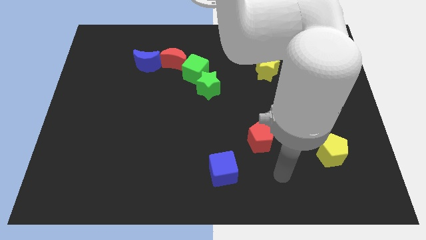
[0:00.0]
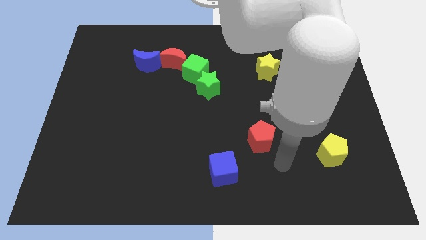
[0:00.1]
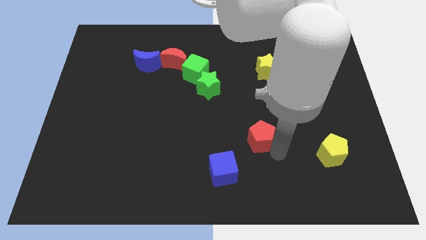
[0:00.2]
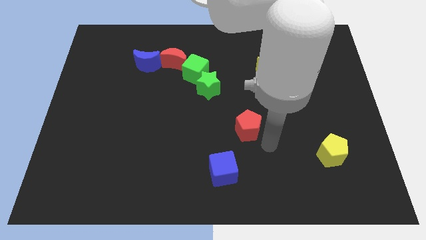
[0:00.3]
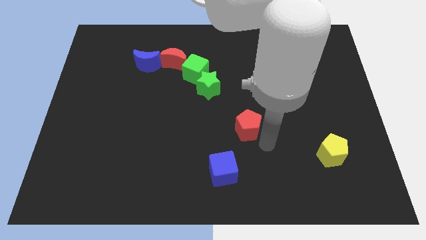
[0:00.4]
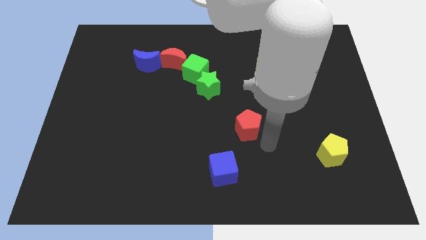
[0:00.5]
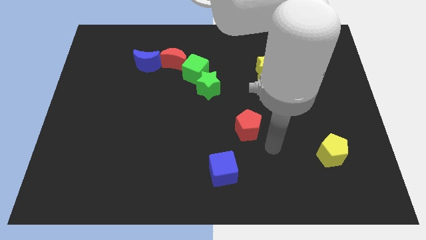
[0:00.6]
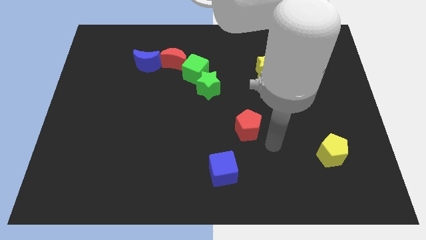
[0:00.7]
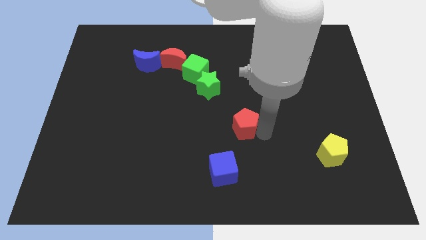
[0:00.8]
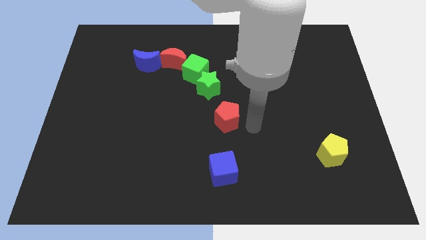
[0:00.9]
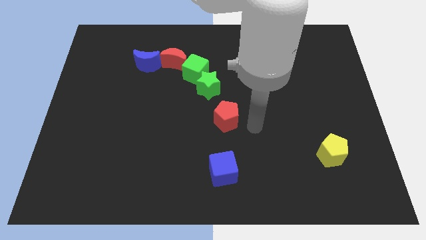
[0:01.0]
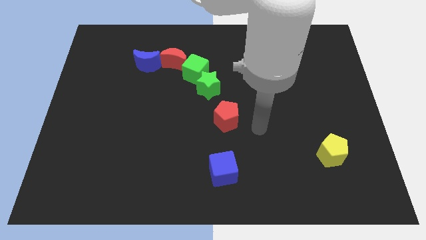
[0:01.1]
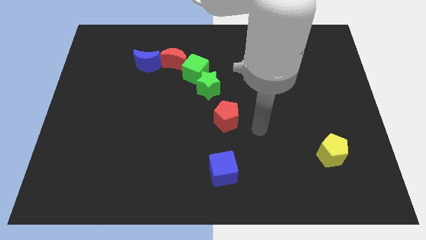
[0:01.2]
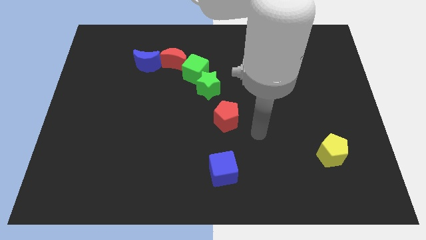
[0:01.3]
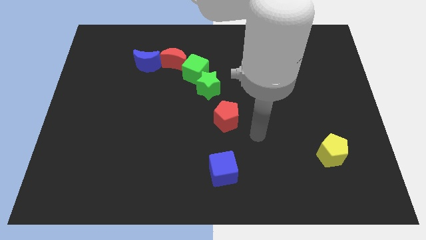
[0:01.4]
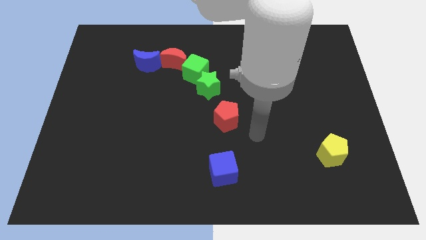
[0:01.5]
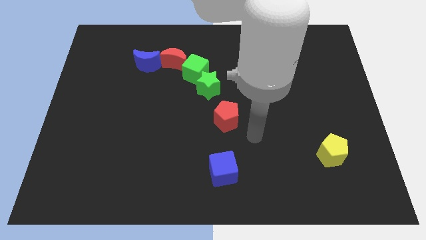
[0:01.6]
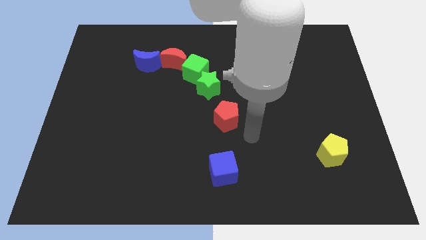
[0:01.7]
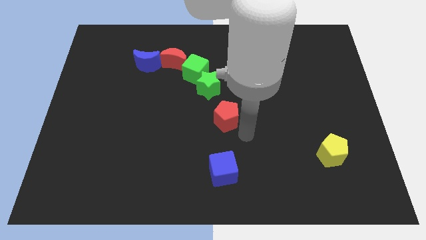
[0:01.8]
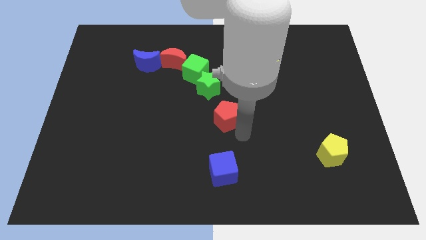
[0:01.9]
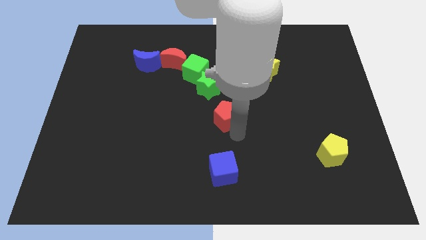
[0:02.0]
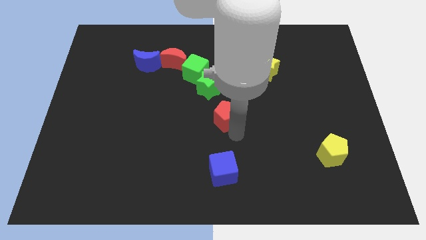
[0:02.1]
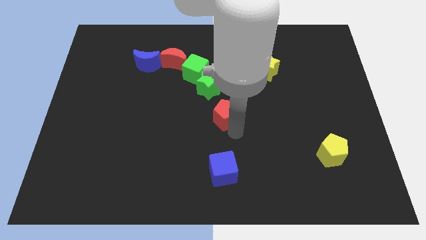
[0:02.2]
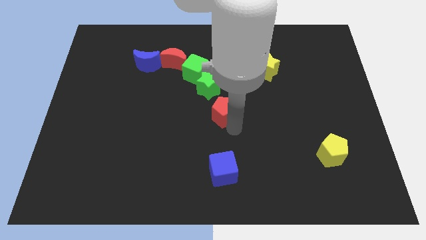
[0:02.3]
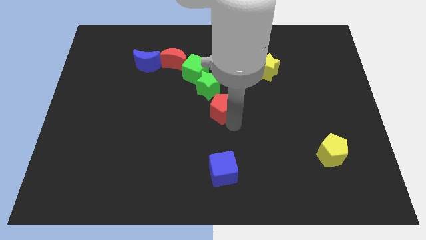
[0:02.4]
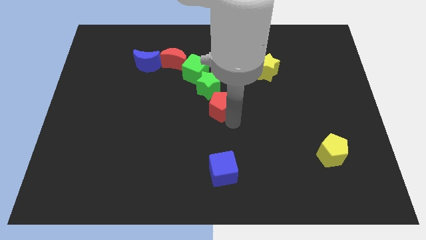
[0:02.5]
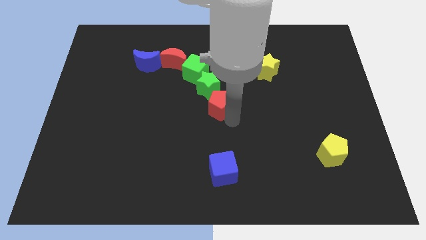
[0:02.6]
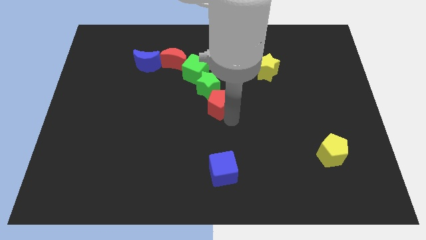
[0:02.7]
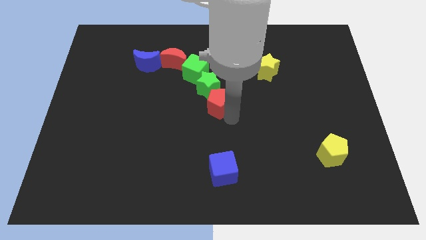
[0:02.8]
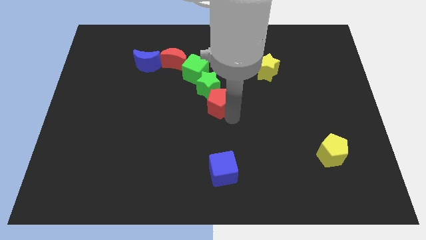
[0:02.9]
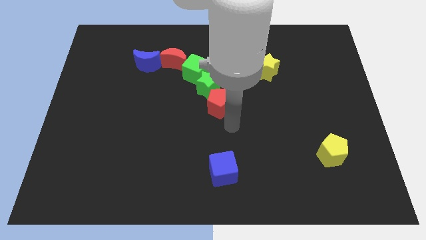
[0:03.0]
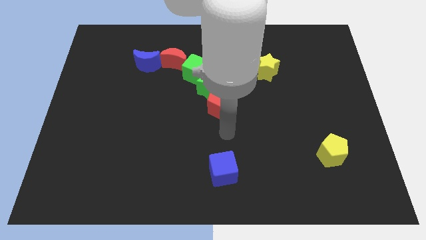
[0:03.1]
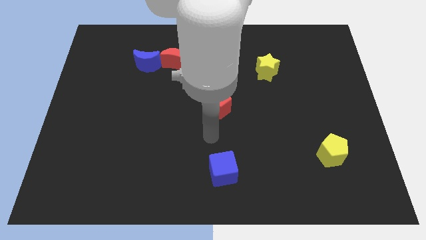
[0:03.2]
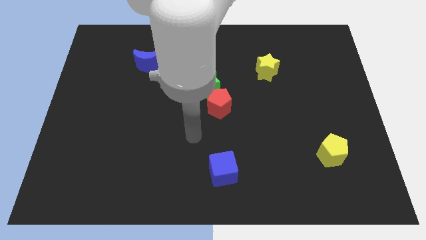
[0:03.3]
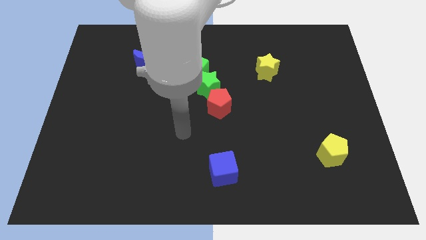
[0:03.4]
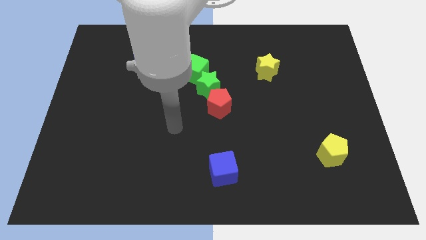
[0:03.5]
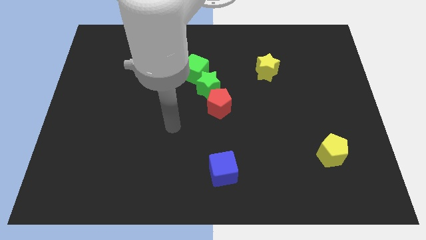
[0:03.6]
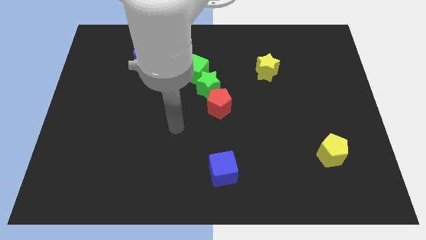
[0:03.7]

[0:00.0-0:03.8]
push the red pentagon to the right of the green star

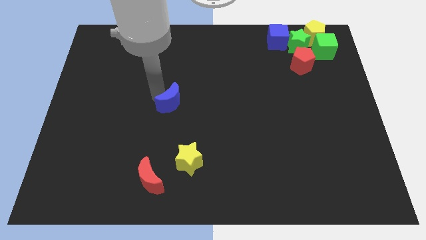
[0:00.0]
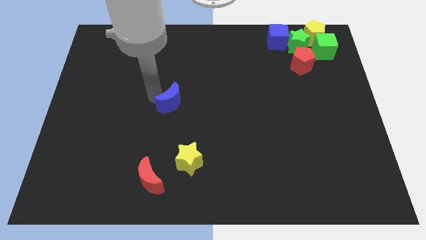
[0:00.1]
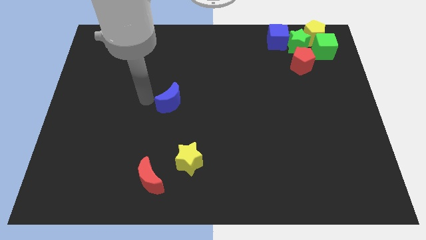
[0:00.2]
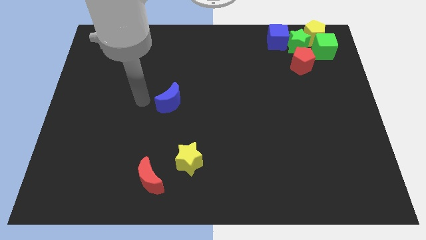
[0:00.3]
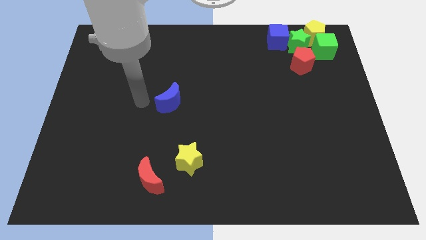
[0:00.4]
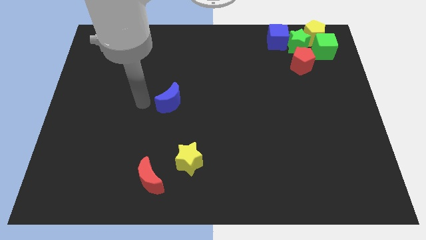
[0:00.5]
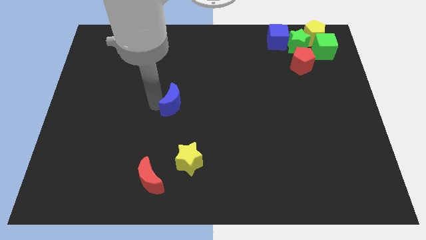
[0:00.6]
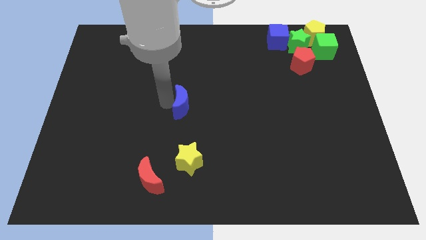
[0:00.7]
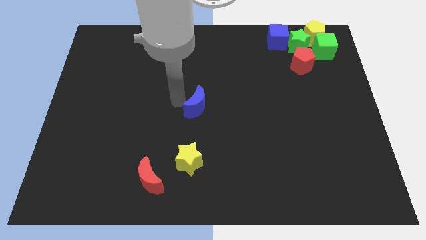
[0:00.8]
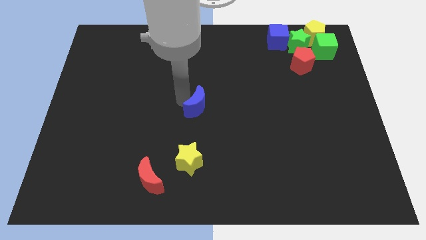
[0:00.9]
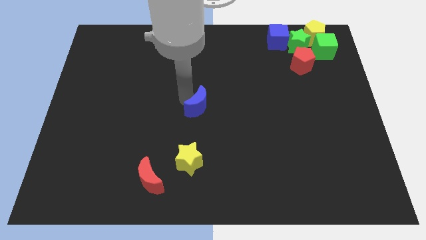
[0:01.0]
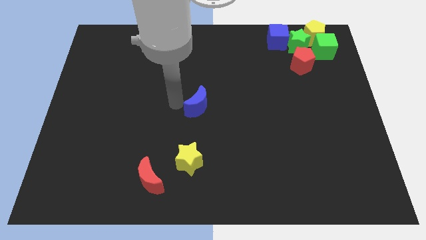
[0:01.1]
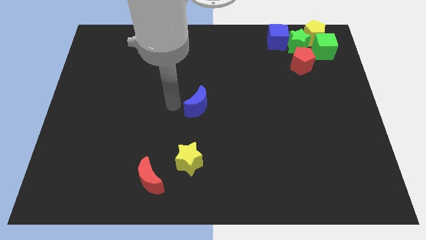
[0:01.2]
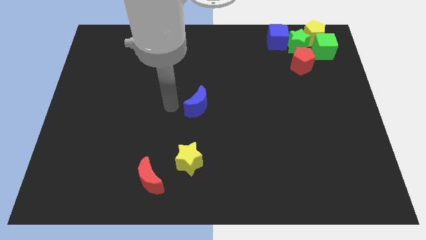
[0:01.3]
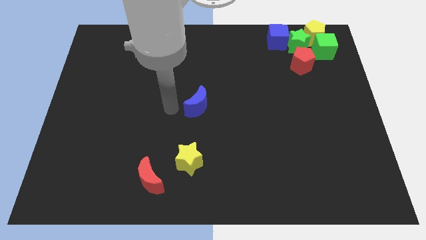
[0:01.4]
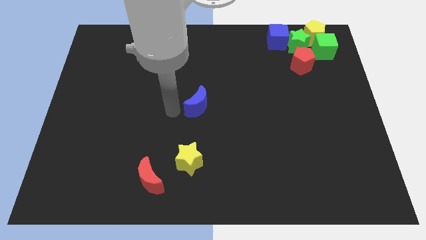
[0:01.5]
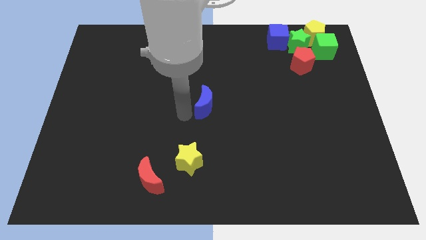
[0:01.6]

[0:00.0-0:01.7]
push the blue crescent to the center of the board

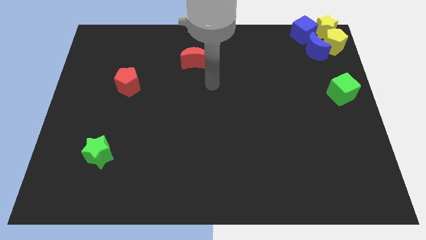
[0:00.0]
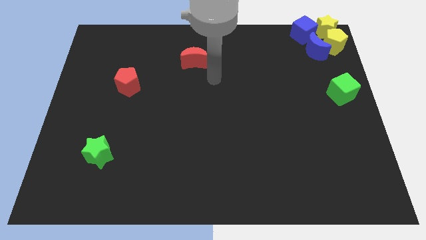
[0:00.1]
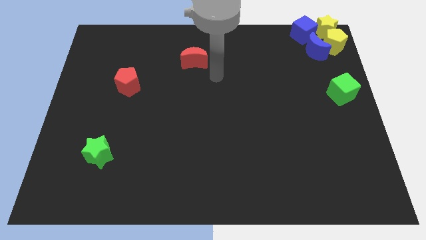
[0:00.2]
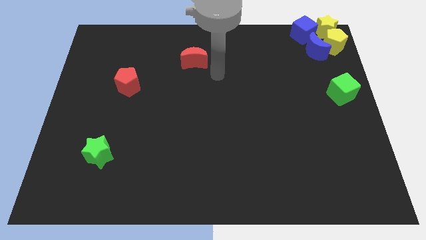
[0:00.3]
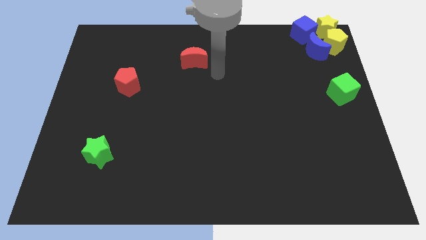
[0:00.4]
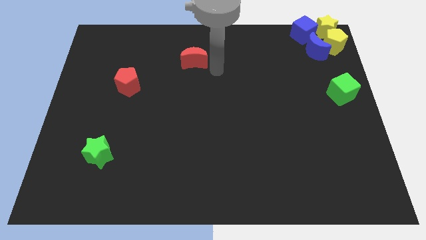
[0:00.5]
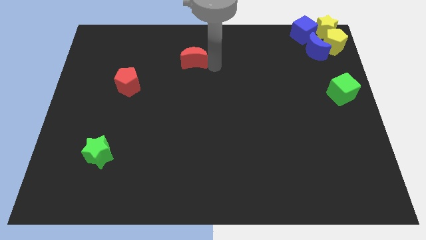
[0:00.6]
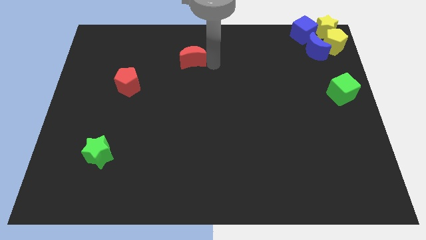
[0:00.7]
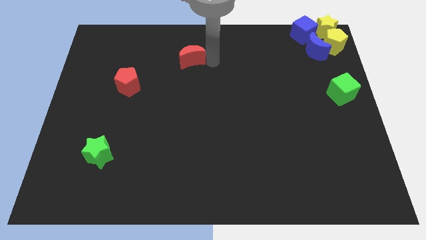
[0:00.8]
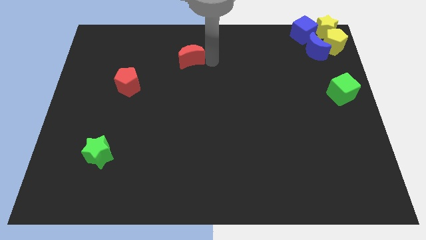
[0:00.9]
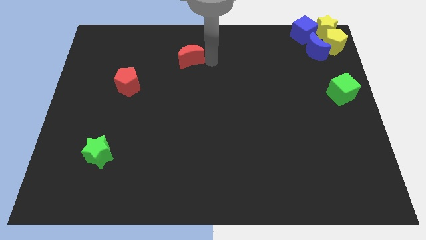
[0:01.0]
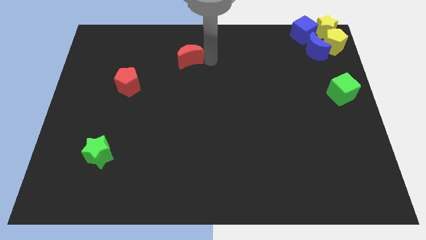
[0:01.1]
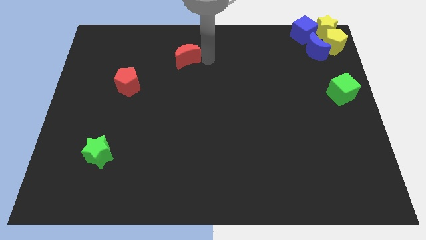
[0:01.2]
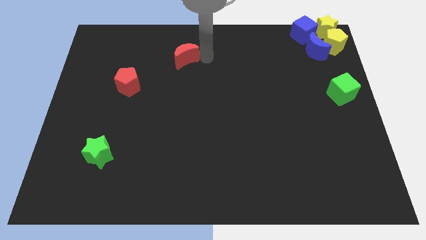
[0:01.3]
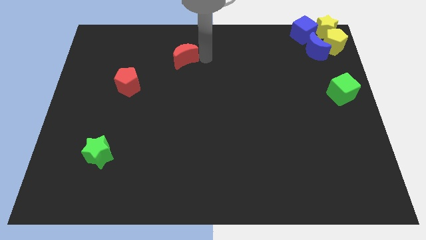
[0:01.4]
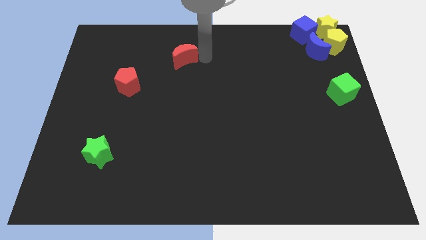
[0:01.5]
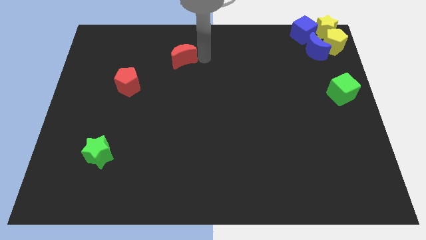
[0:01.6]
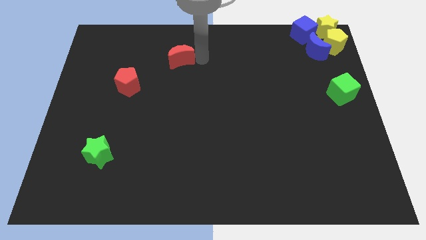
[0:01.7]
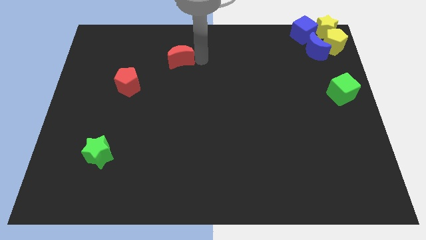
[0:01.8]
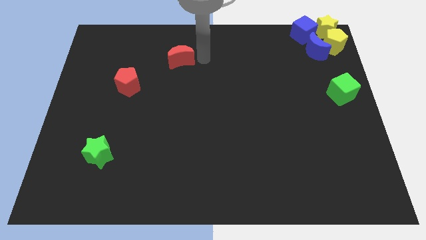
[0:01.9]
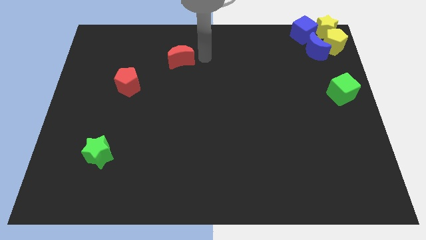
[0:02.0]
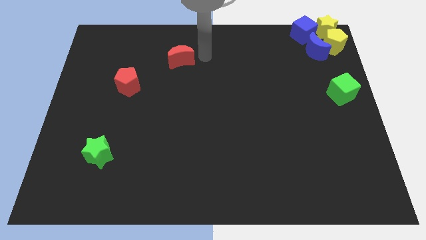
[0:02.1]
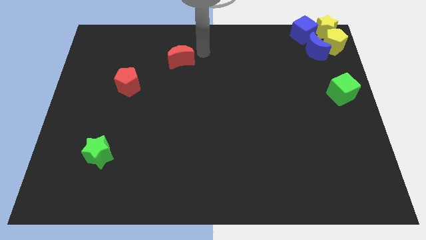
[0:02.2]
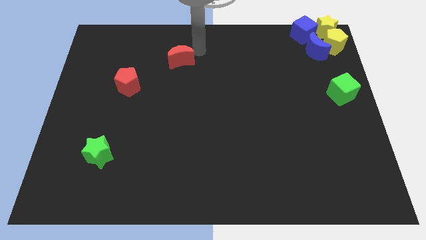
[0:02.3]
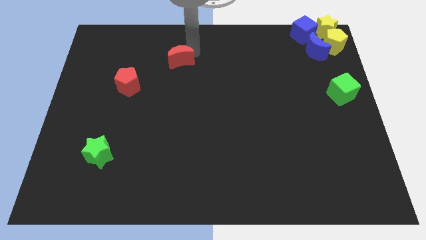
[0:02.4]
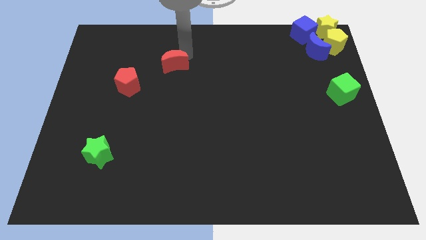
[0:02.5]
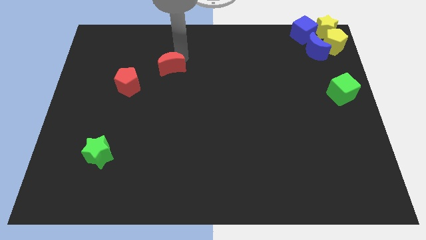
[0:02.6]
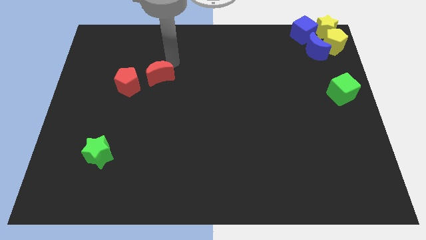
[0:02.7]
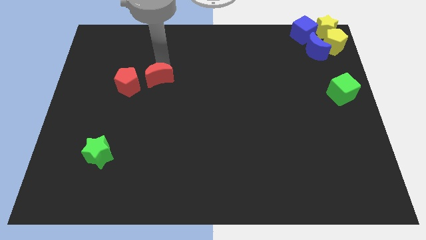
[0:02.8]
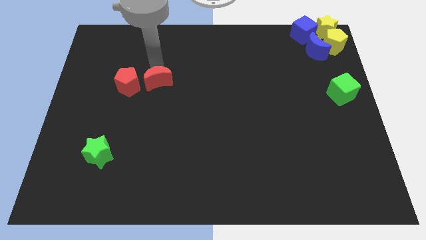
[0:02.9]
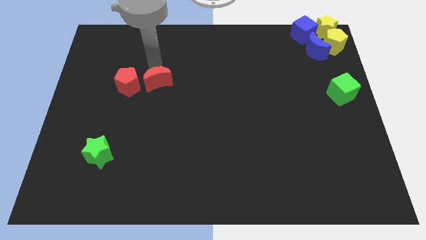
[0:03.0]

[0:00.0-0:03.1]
push the red crescent near to the red pentagon

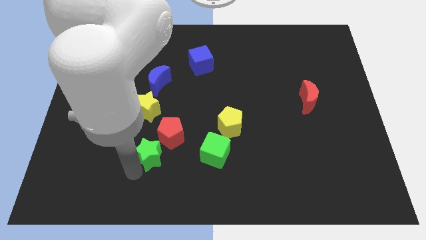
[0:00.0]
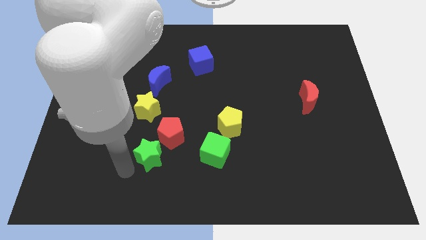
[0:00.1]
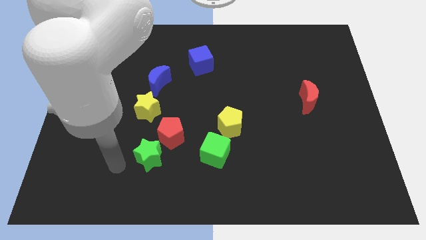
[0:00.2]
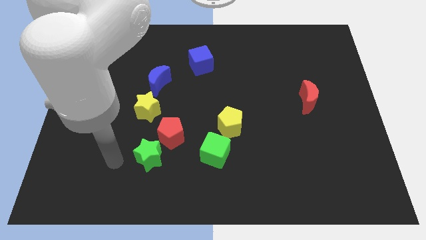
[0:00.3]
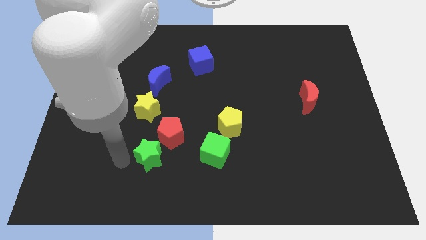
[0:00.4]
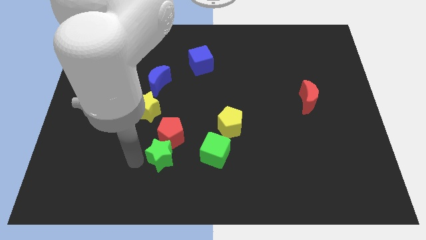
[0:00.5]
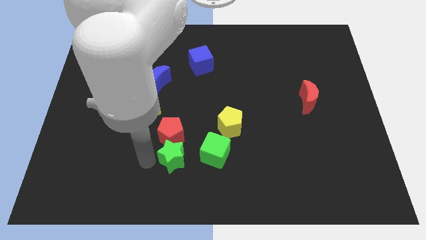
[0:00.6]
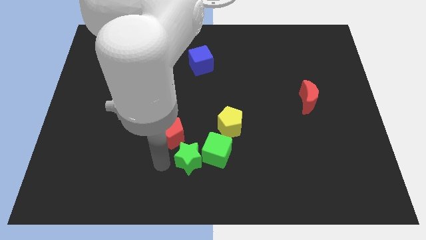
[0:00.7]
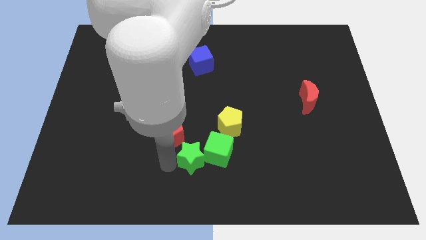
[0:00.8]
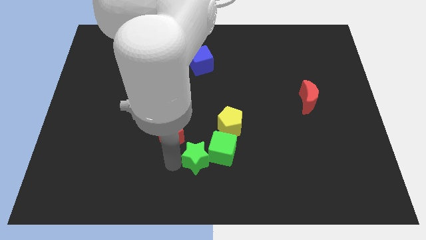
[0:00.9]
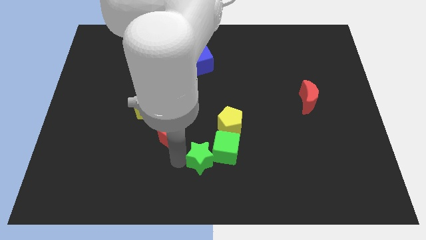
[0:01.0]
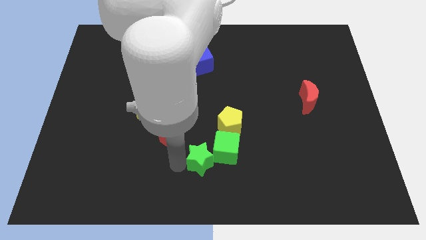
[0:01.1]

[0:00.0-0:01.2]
move green star into the green cube
